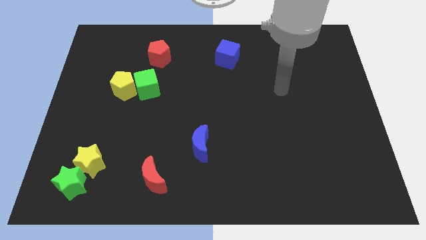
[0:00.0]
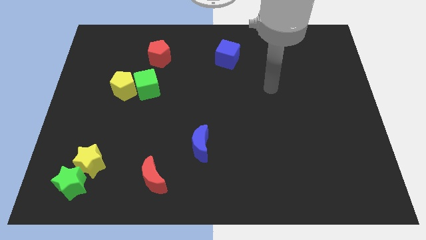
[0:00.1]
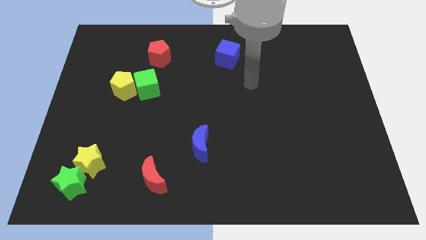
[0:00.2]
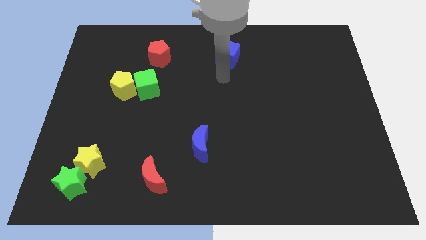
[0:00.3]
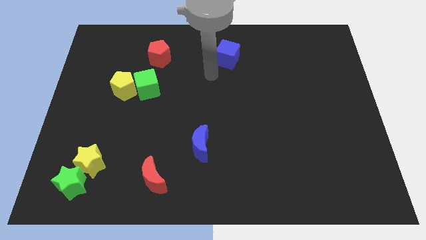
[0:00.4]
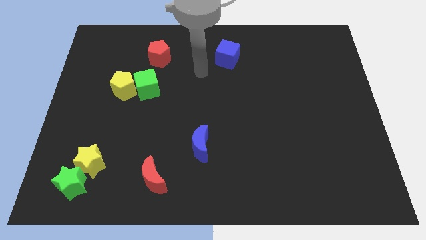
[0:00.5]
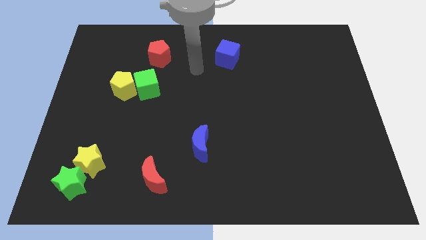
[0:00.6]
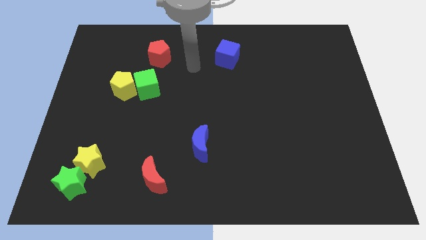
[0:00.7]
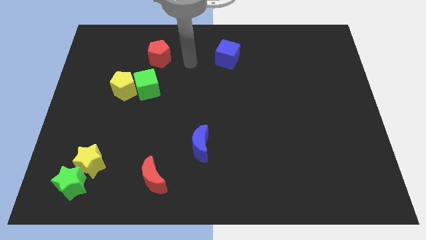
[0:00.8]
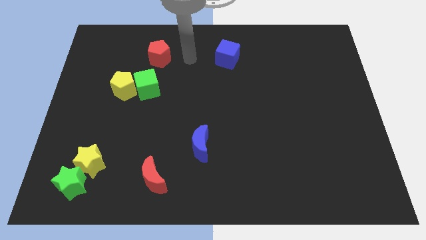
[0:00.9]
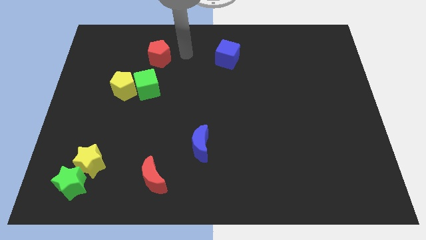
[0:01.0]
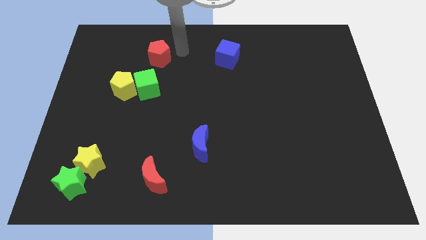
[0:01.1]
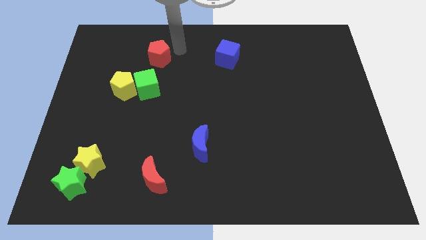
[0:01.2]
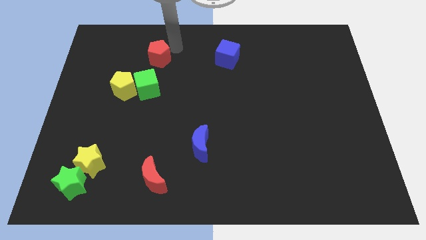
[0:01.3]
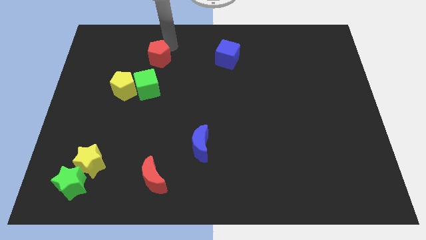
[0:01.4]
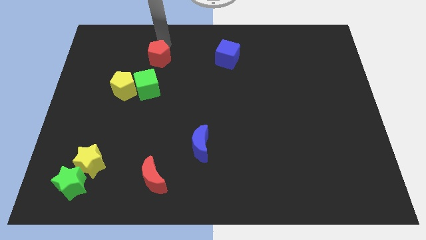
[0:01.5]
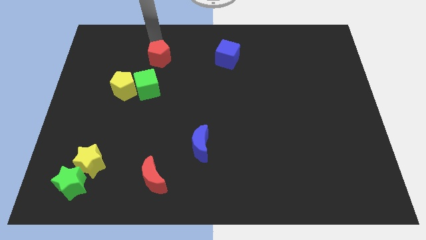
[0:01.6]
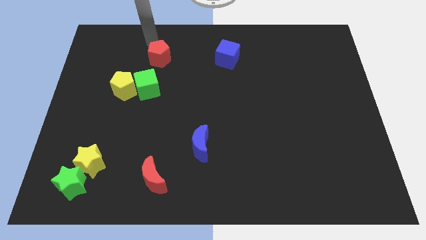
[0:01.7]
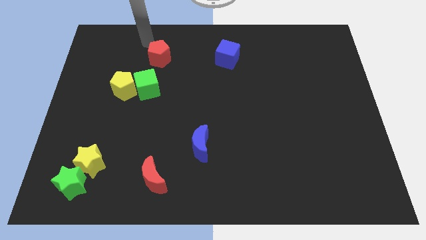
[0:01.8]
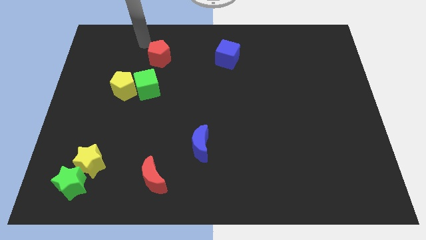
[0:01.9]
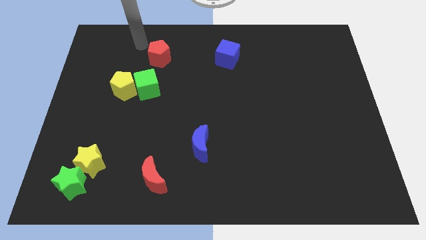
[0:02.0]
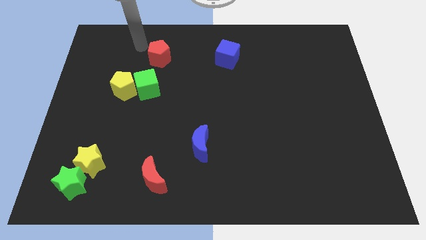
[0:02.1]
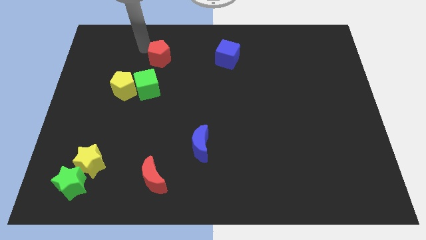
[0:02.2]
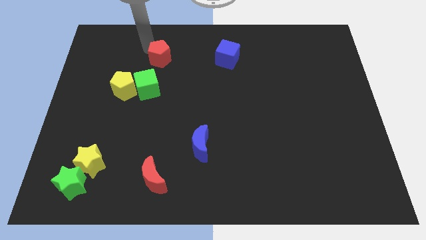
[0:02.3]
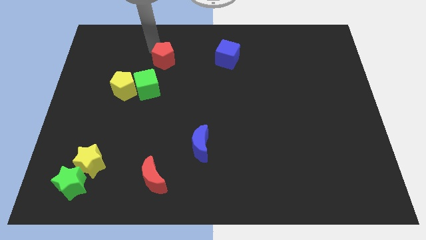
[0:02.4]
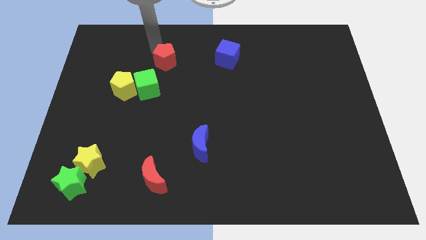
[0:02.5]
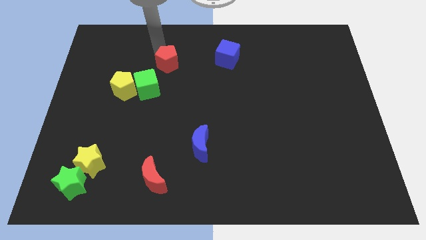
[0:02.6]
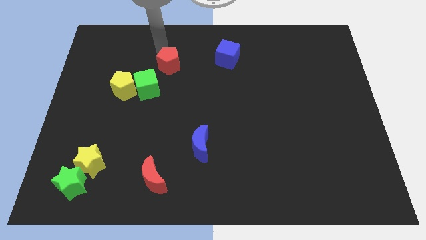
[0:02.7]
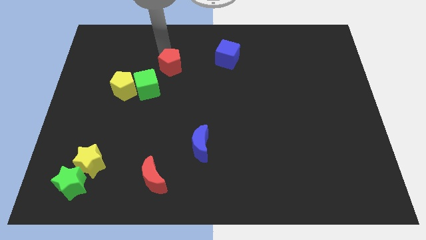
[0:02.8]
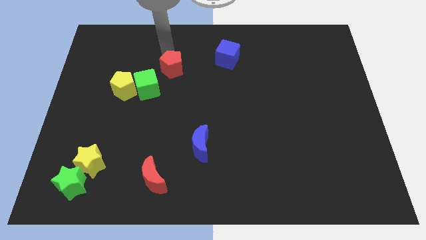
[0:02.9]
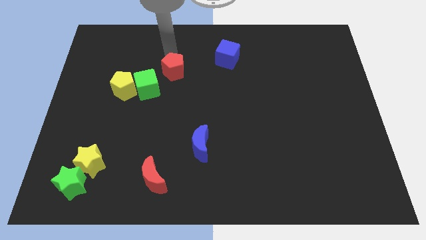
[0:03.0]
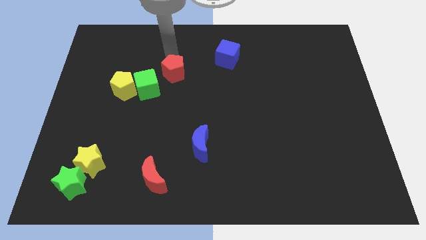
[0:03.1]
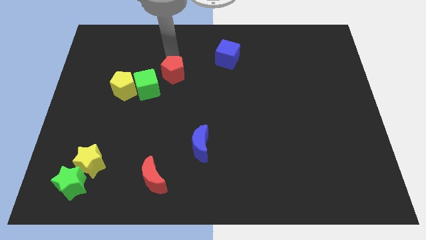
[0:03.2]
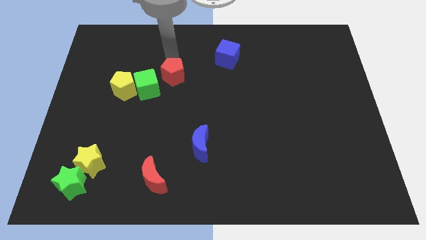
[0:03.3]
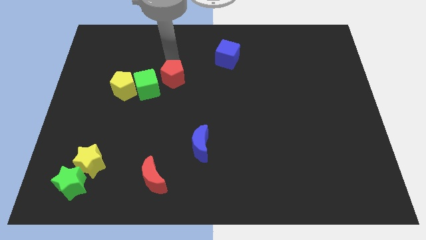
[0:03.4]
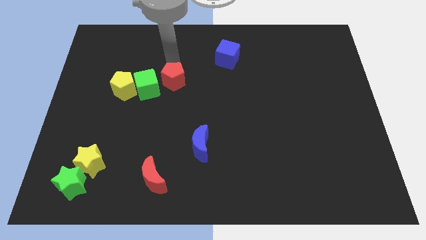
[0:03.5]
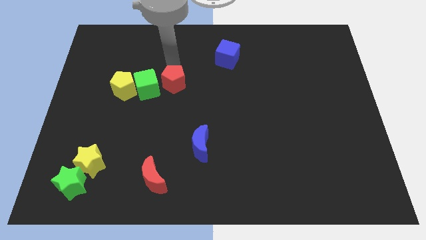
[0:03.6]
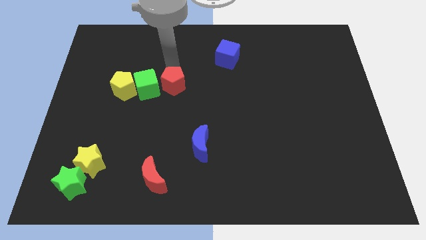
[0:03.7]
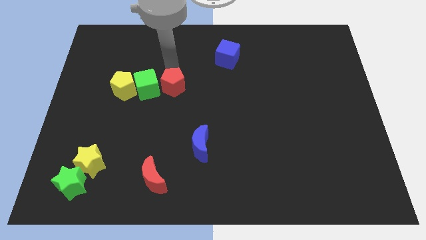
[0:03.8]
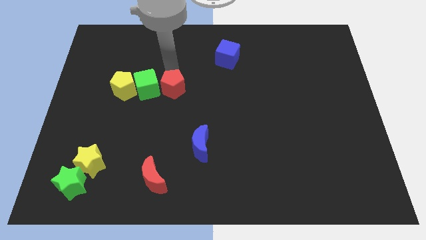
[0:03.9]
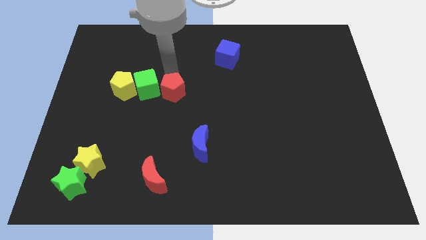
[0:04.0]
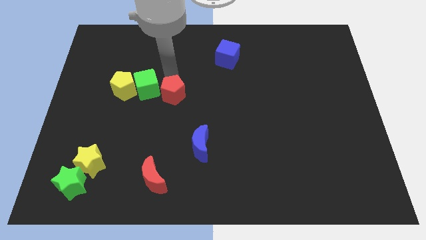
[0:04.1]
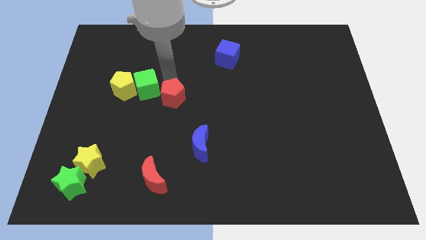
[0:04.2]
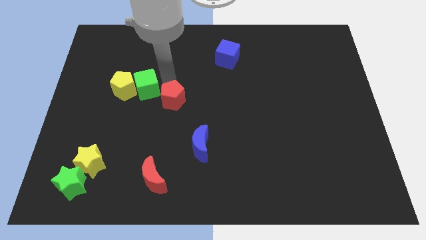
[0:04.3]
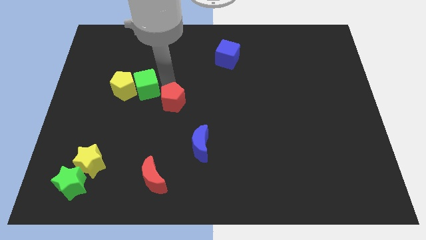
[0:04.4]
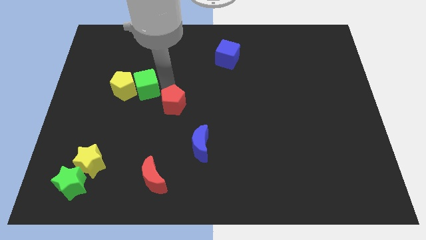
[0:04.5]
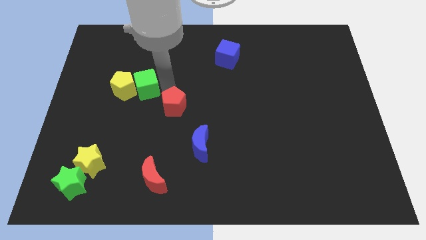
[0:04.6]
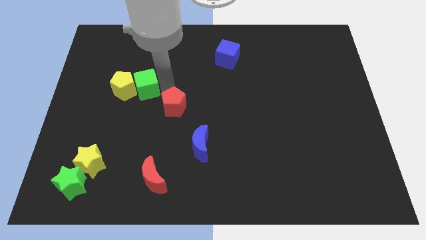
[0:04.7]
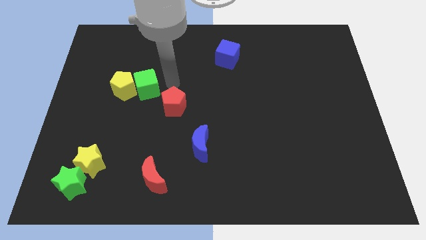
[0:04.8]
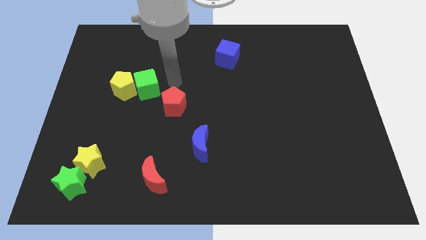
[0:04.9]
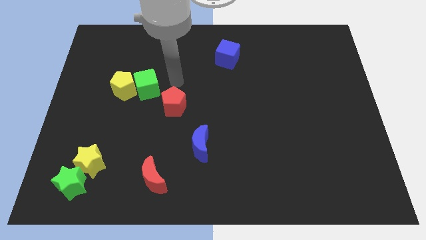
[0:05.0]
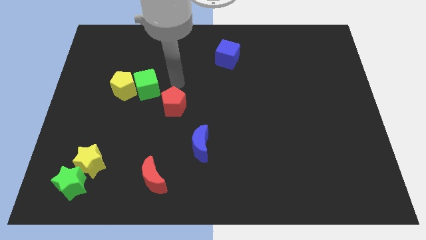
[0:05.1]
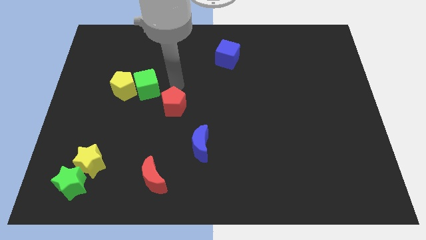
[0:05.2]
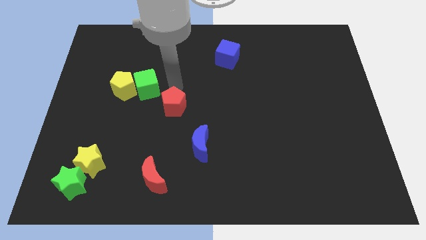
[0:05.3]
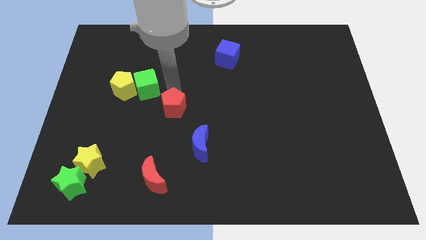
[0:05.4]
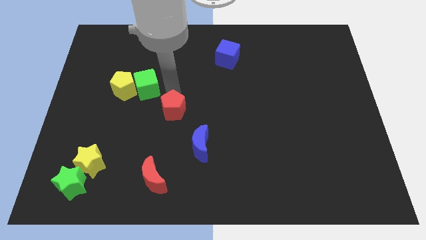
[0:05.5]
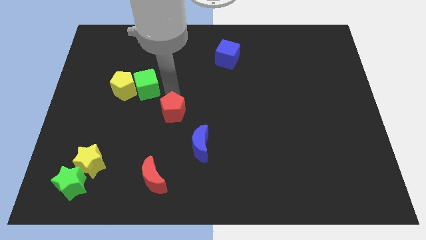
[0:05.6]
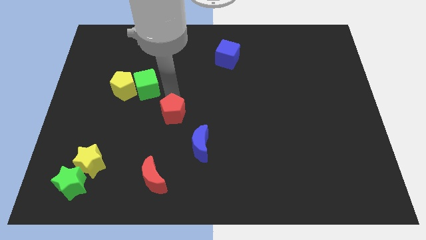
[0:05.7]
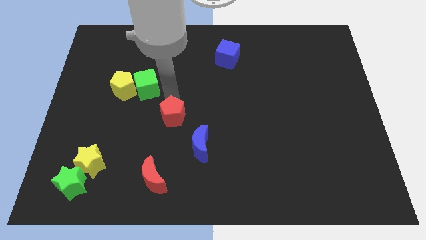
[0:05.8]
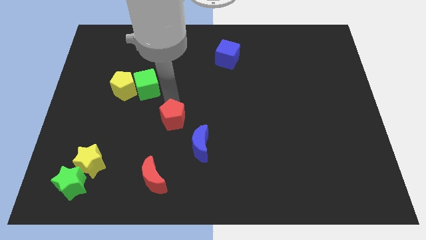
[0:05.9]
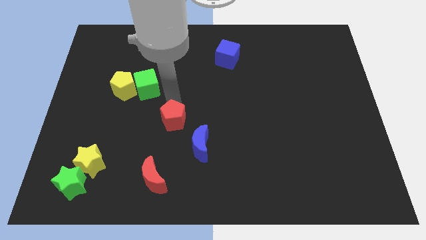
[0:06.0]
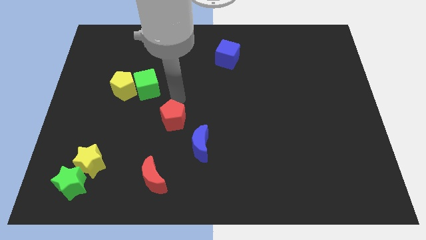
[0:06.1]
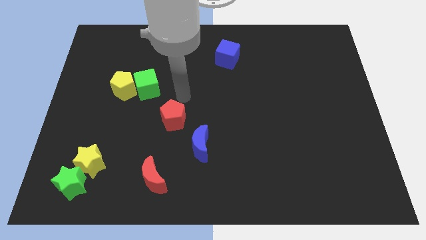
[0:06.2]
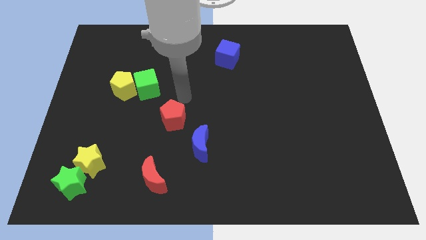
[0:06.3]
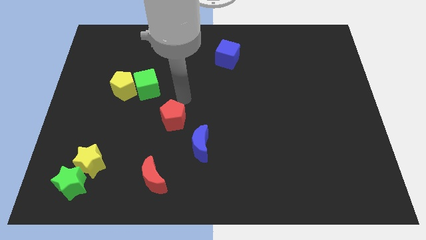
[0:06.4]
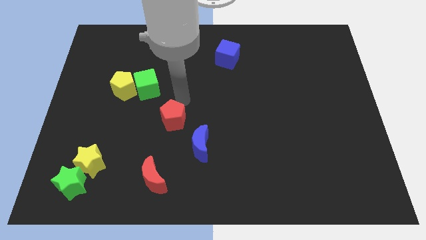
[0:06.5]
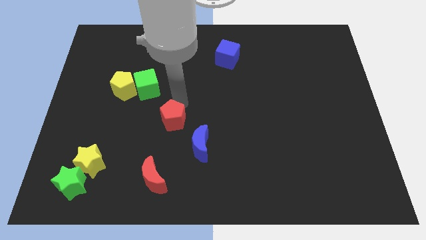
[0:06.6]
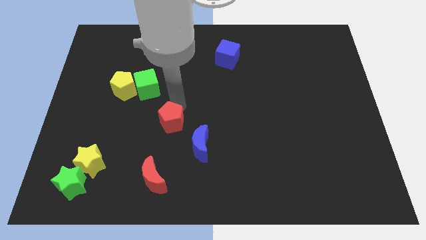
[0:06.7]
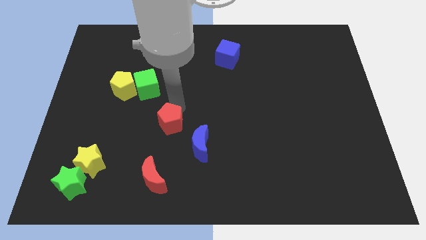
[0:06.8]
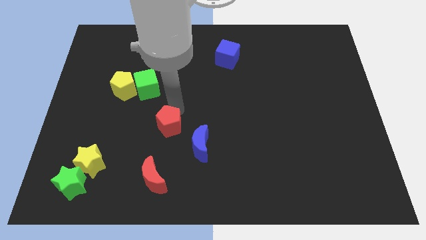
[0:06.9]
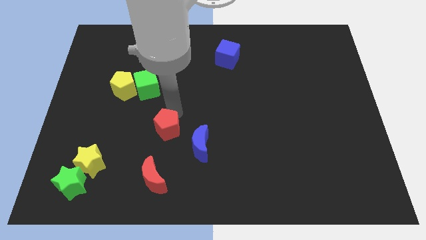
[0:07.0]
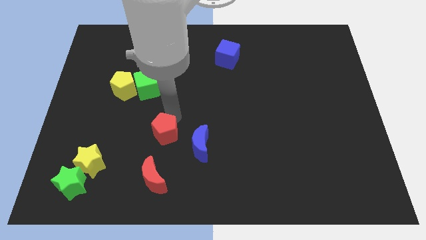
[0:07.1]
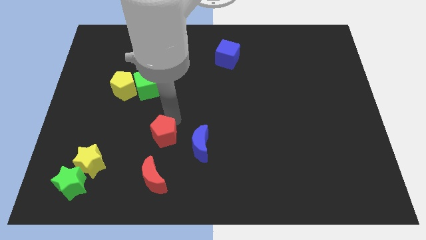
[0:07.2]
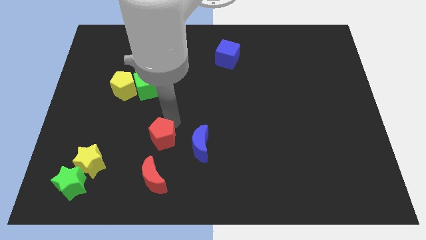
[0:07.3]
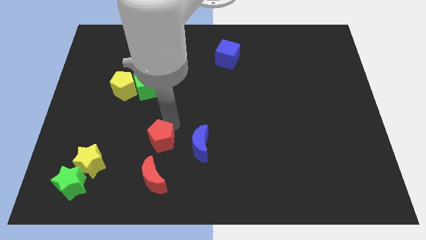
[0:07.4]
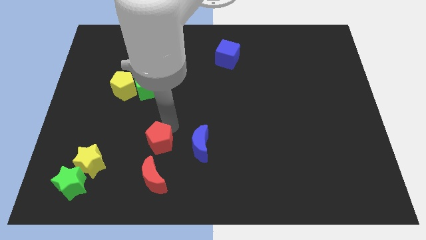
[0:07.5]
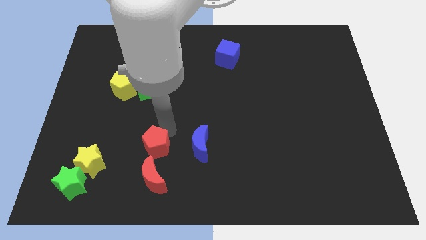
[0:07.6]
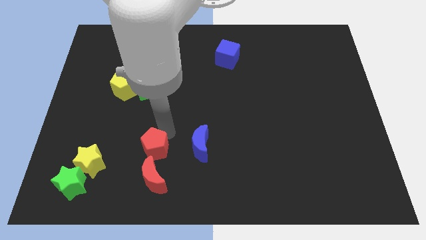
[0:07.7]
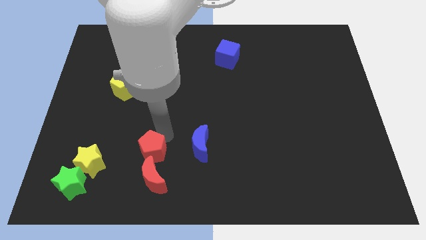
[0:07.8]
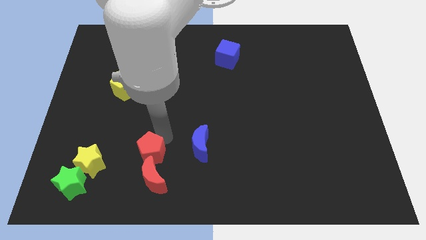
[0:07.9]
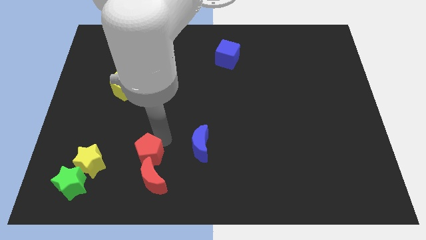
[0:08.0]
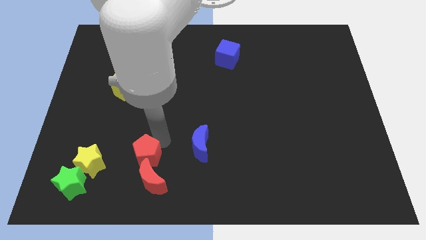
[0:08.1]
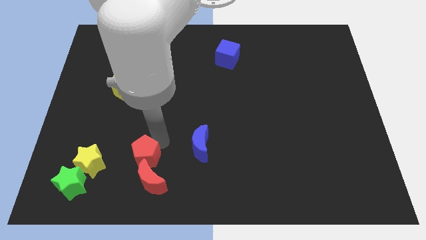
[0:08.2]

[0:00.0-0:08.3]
push the red pentagon next to the red moon
